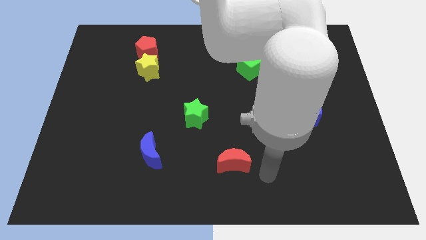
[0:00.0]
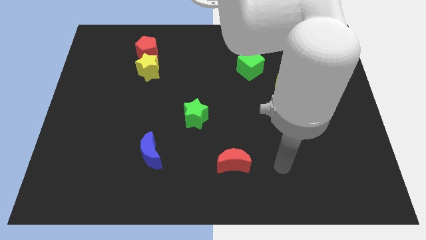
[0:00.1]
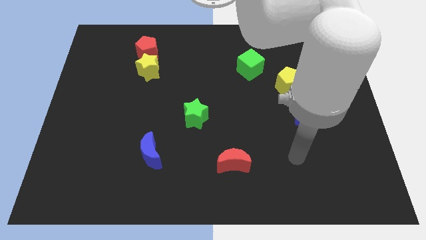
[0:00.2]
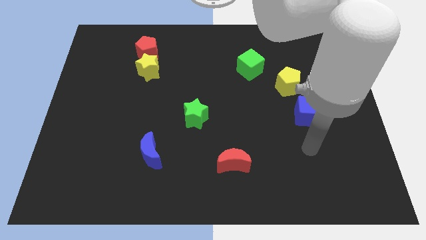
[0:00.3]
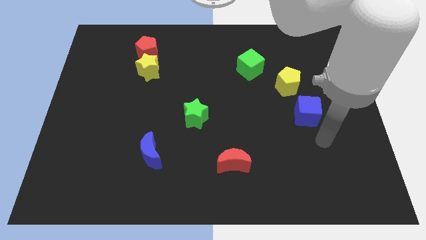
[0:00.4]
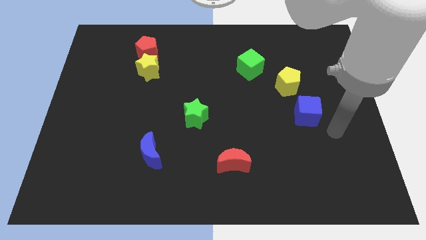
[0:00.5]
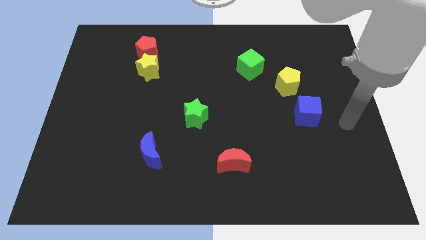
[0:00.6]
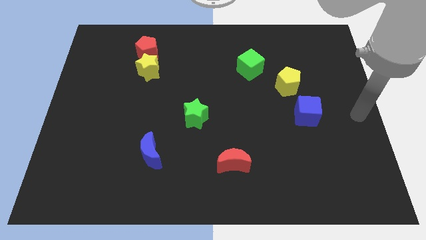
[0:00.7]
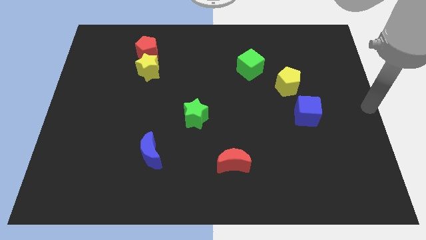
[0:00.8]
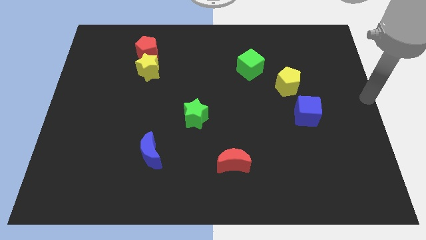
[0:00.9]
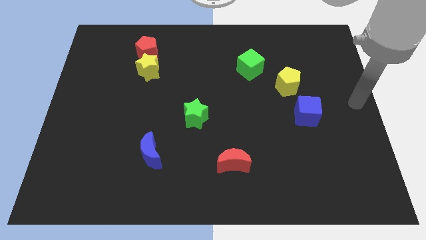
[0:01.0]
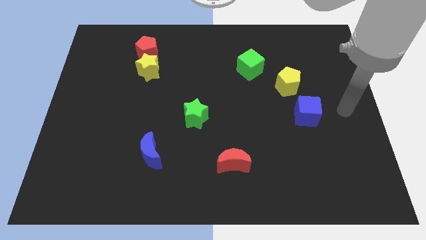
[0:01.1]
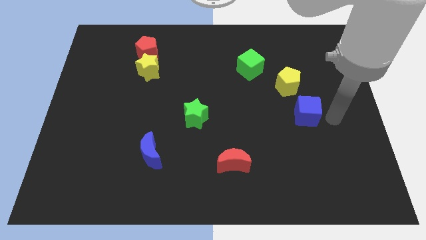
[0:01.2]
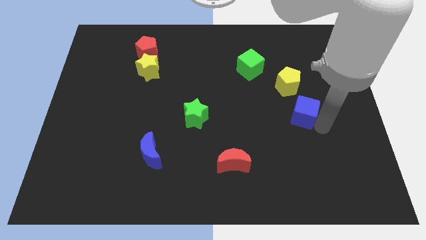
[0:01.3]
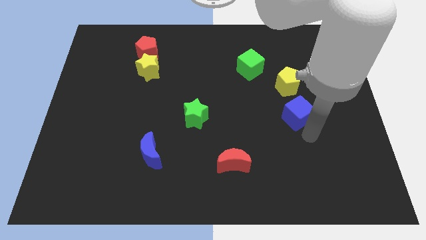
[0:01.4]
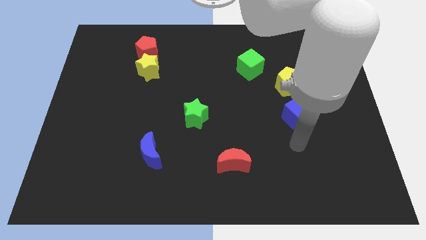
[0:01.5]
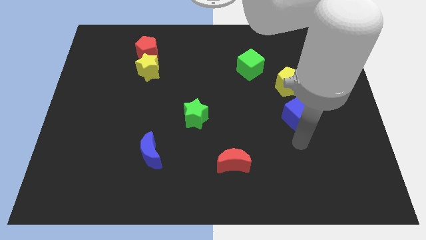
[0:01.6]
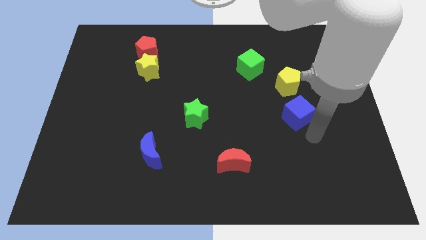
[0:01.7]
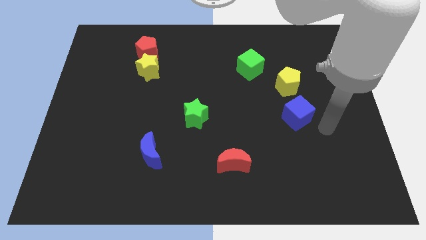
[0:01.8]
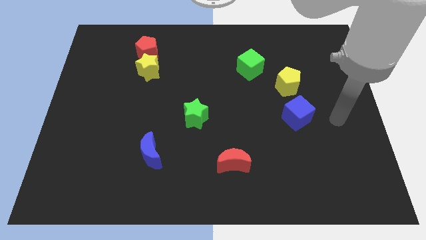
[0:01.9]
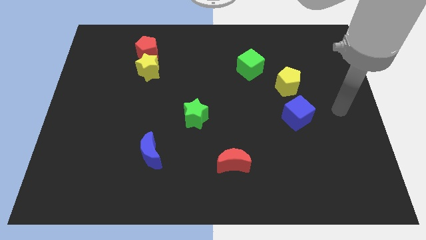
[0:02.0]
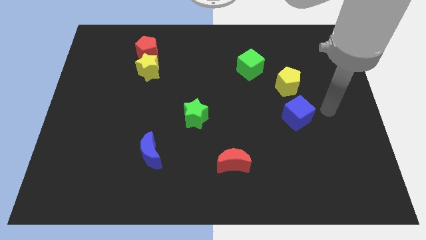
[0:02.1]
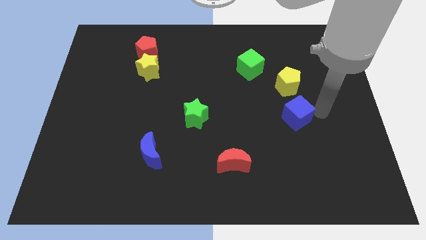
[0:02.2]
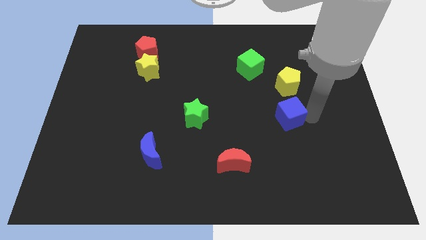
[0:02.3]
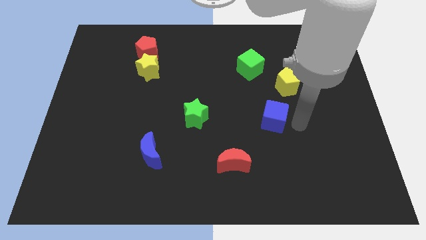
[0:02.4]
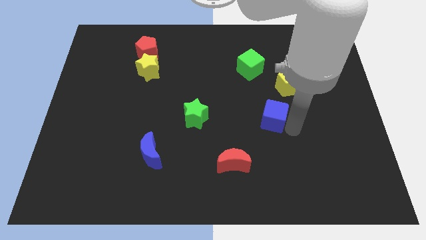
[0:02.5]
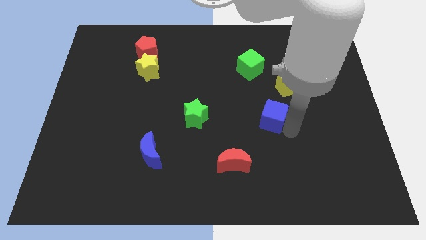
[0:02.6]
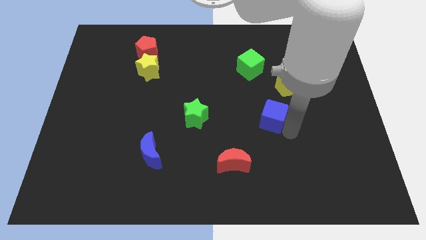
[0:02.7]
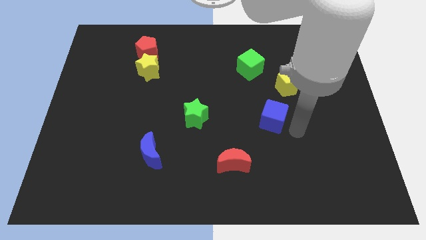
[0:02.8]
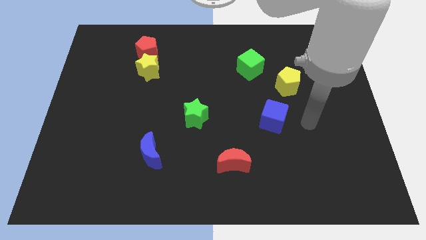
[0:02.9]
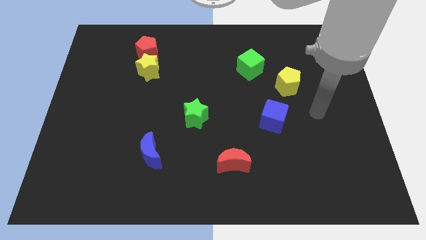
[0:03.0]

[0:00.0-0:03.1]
push the blue cube slightly to the left

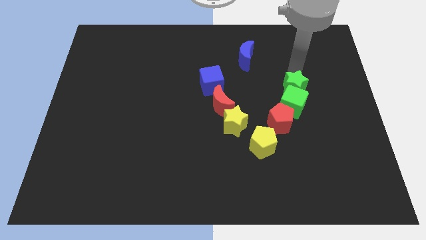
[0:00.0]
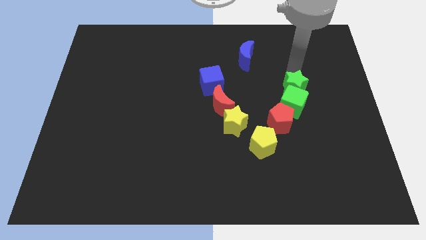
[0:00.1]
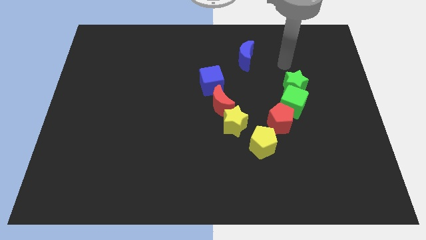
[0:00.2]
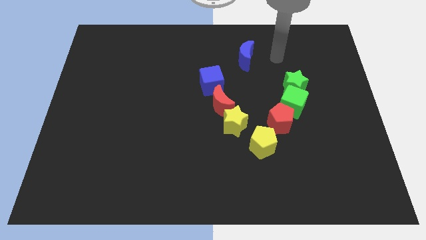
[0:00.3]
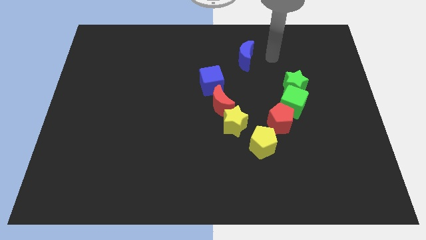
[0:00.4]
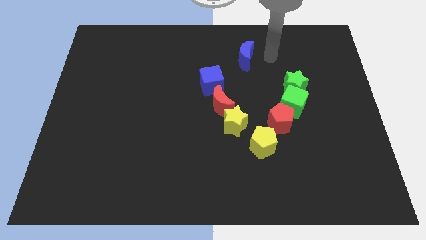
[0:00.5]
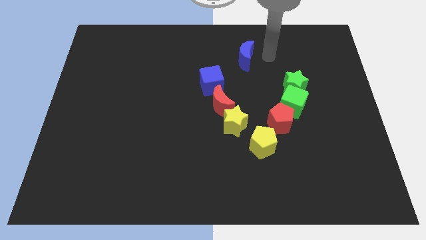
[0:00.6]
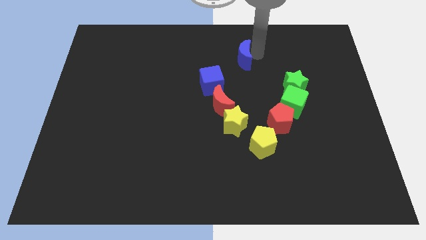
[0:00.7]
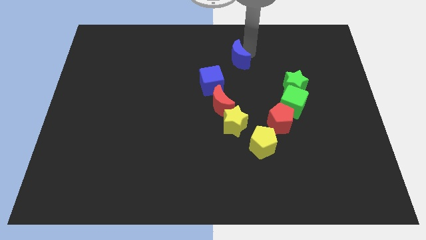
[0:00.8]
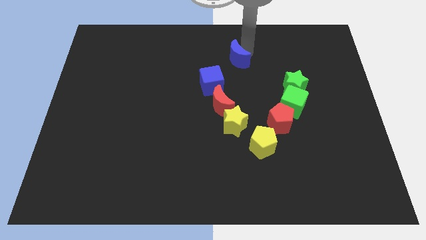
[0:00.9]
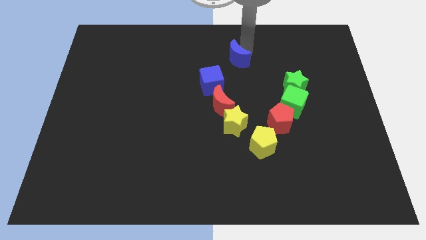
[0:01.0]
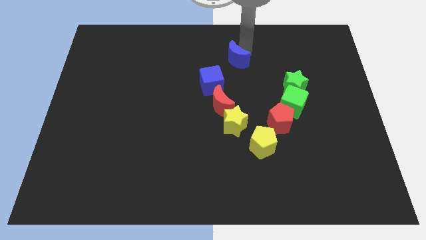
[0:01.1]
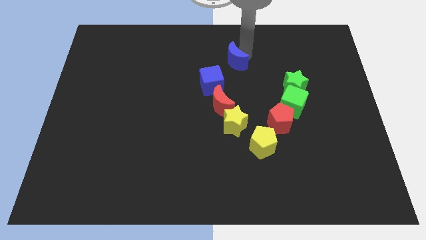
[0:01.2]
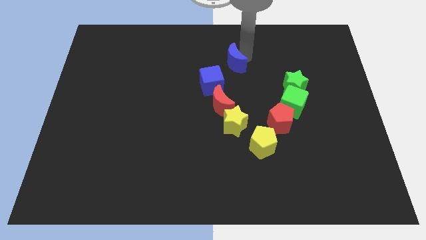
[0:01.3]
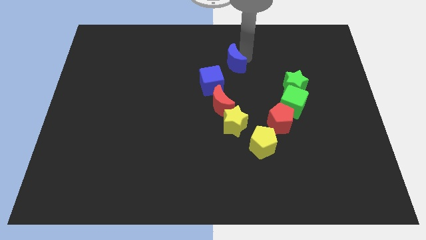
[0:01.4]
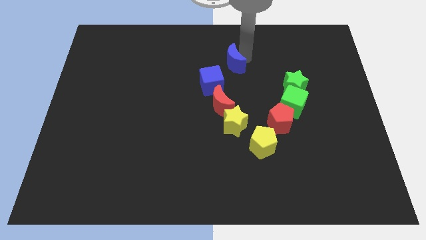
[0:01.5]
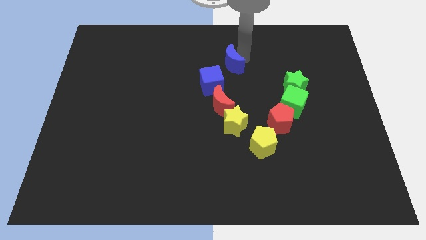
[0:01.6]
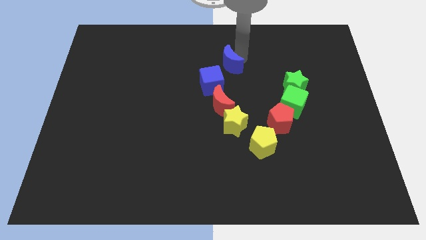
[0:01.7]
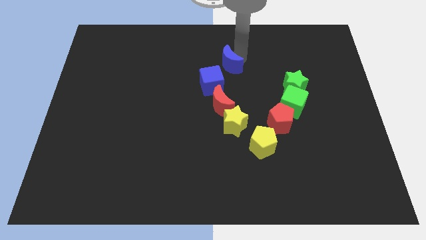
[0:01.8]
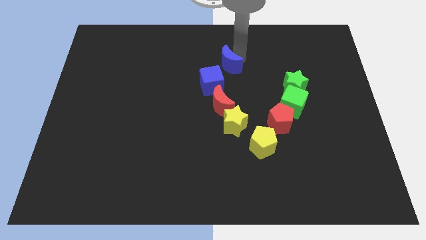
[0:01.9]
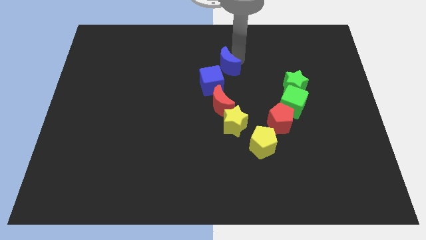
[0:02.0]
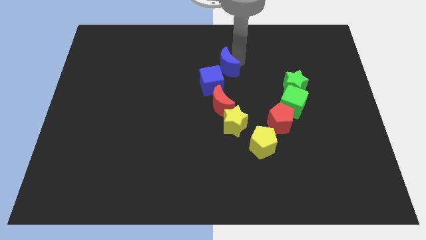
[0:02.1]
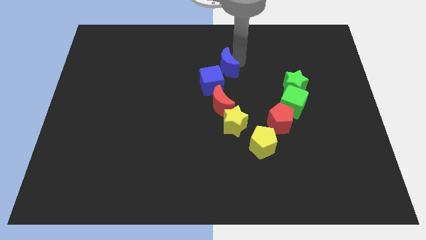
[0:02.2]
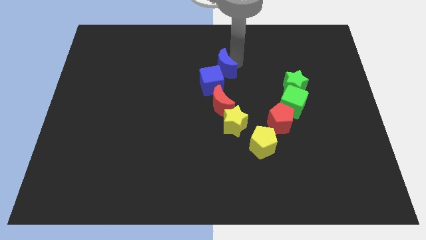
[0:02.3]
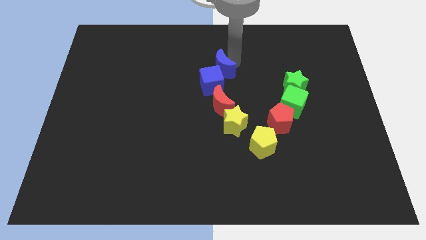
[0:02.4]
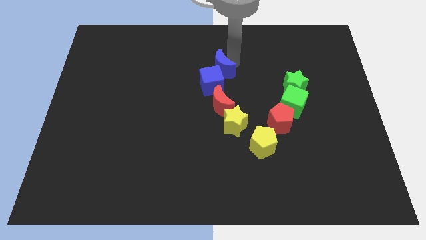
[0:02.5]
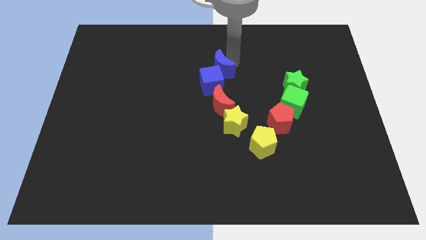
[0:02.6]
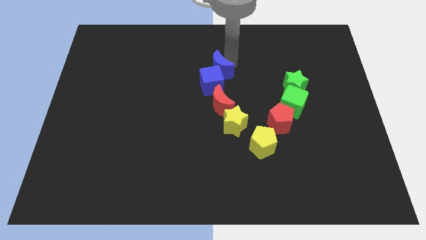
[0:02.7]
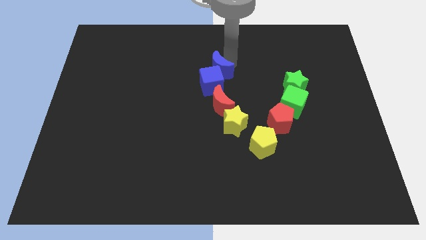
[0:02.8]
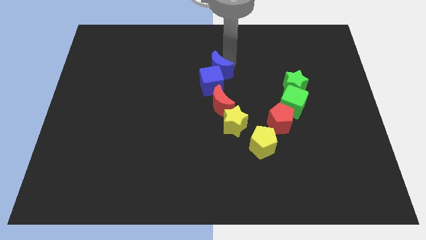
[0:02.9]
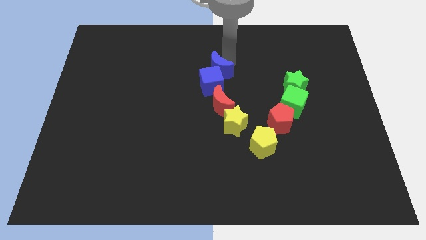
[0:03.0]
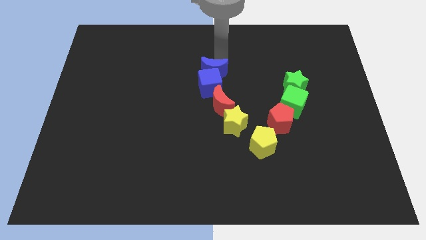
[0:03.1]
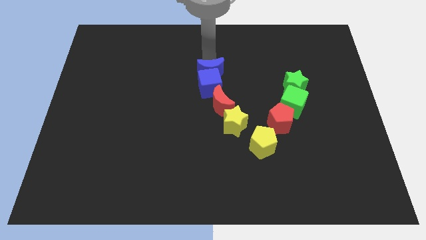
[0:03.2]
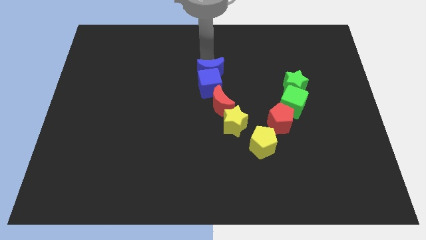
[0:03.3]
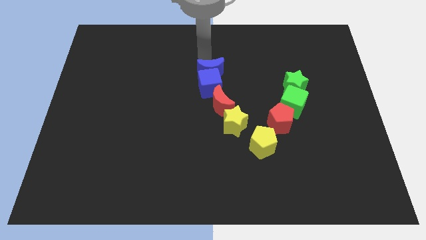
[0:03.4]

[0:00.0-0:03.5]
put the blue moon at the top of blue cube

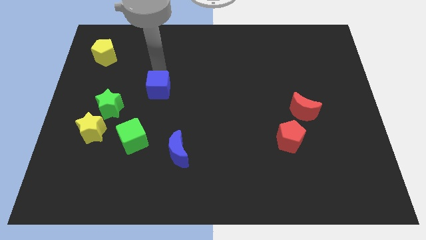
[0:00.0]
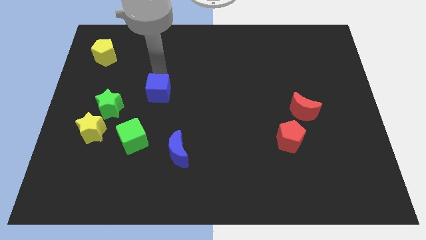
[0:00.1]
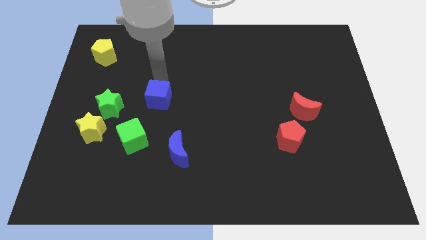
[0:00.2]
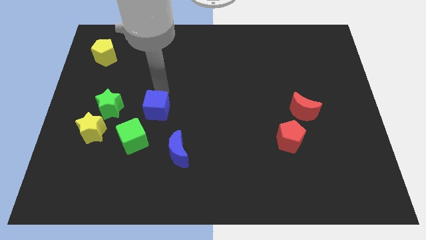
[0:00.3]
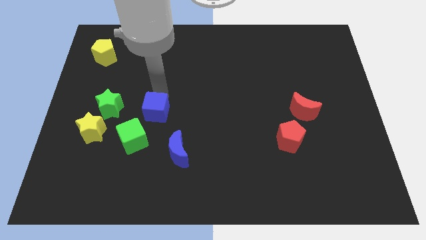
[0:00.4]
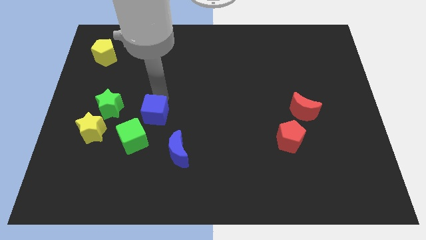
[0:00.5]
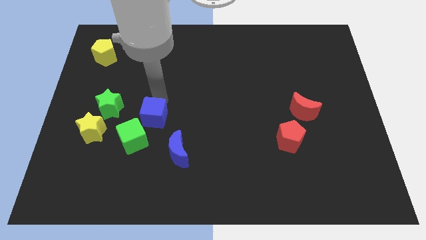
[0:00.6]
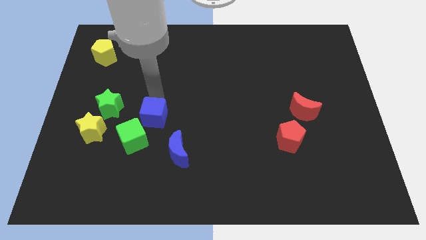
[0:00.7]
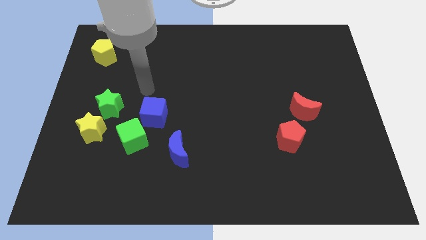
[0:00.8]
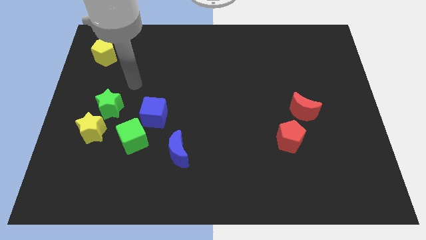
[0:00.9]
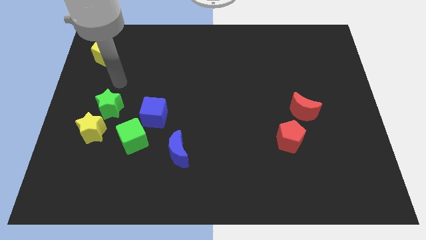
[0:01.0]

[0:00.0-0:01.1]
place the blue cube right to the green star

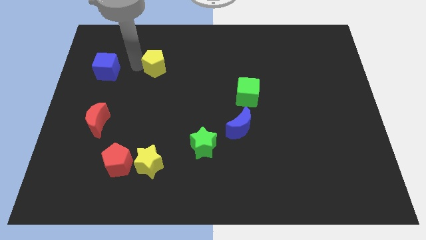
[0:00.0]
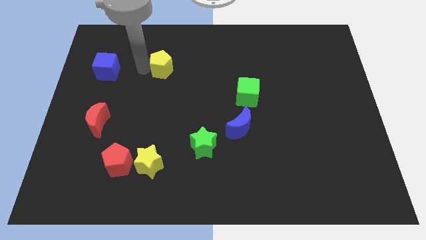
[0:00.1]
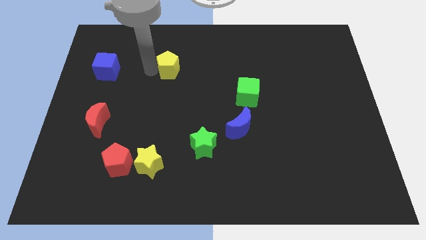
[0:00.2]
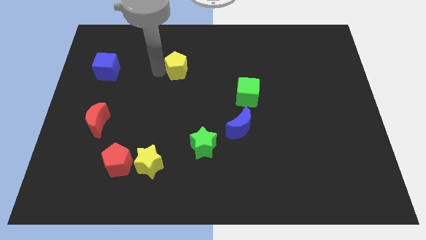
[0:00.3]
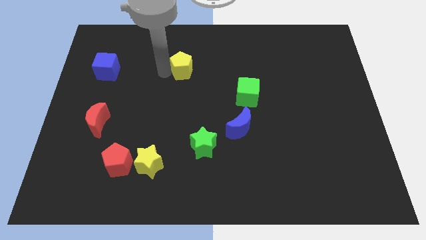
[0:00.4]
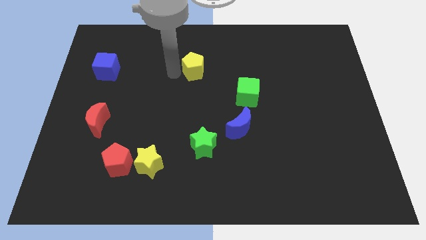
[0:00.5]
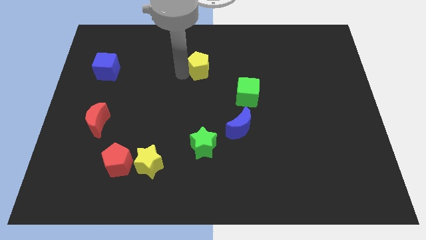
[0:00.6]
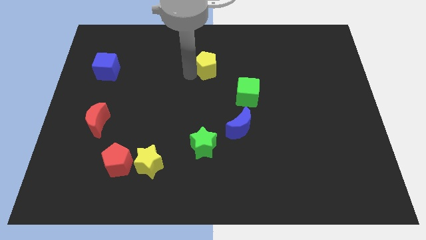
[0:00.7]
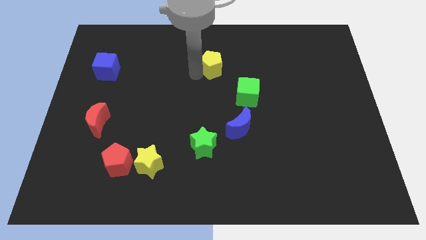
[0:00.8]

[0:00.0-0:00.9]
move the yellow pentagon to the right of the board

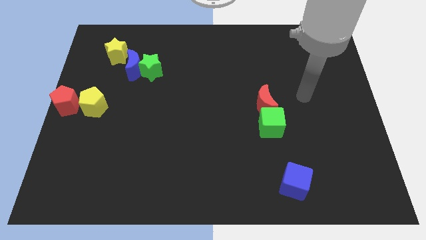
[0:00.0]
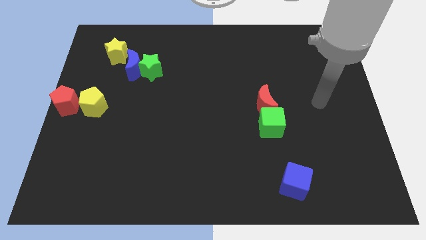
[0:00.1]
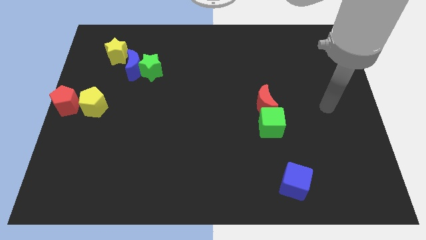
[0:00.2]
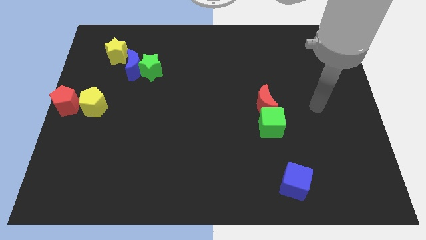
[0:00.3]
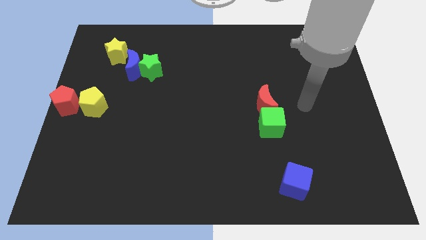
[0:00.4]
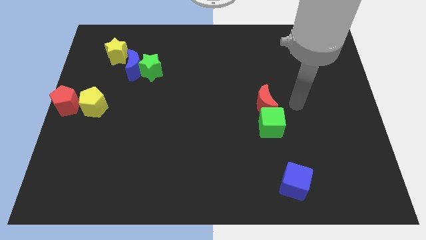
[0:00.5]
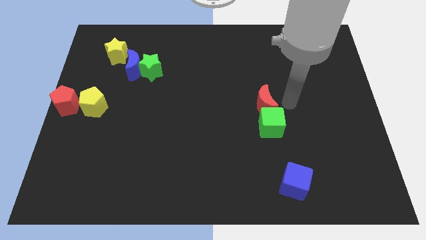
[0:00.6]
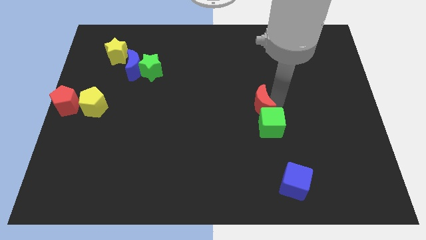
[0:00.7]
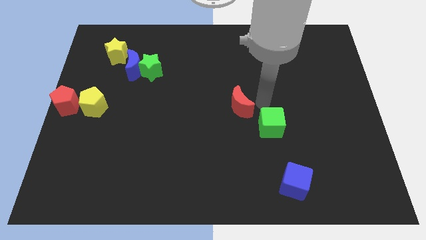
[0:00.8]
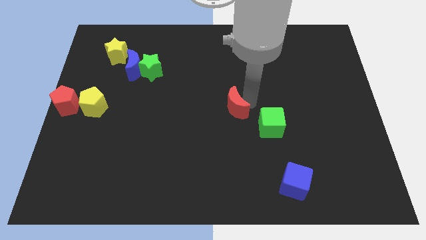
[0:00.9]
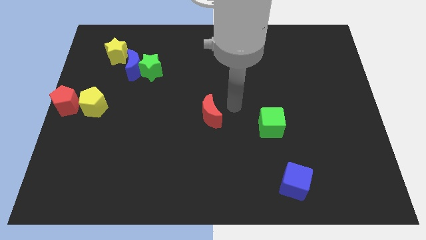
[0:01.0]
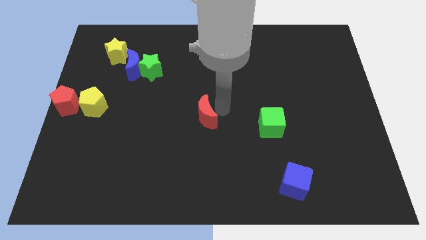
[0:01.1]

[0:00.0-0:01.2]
separate the red crescent from the green cube
